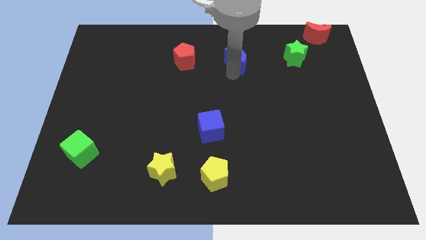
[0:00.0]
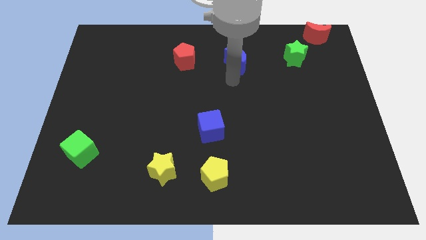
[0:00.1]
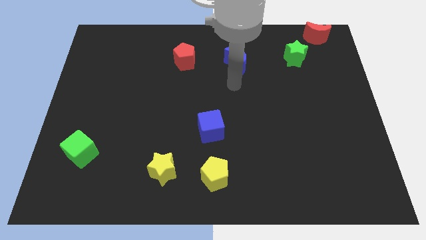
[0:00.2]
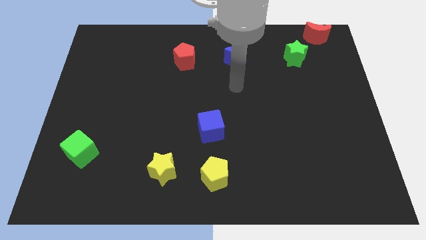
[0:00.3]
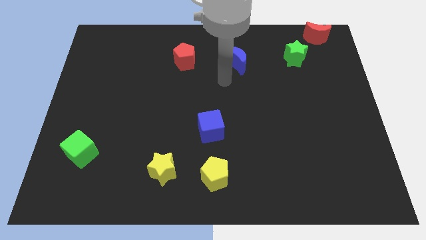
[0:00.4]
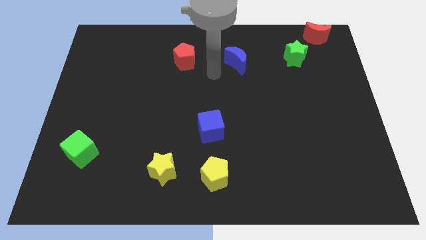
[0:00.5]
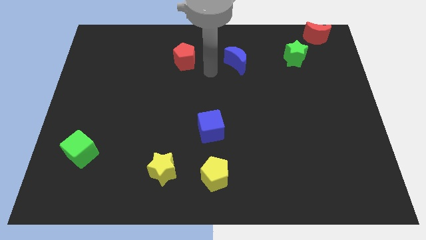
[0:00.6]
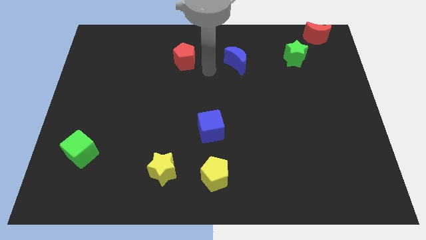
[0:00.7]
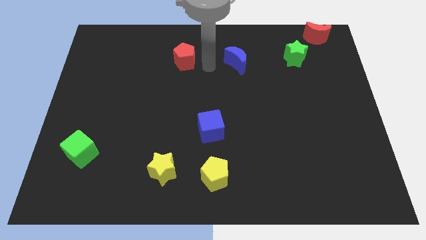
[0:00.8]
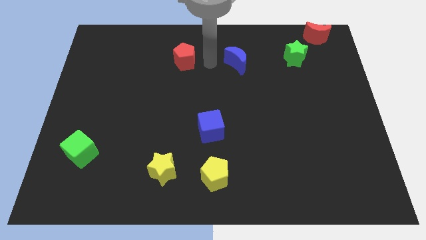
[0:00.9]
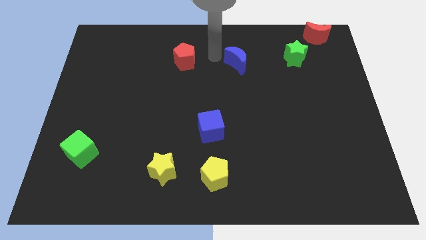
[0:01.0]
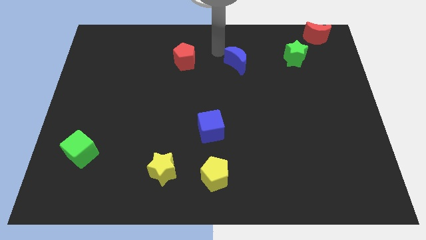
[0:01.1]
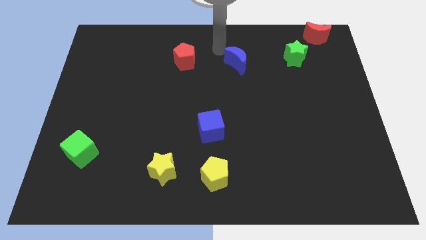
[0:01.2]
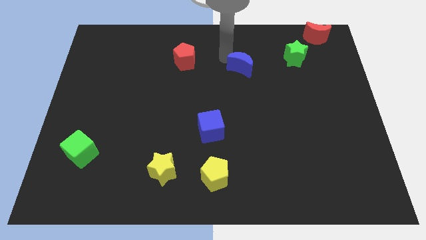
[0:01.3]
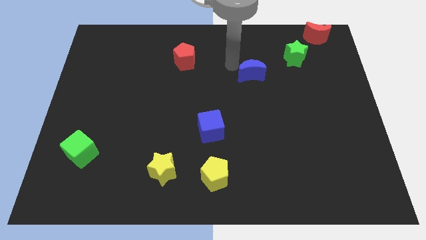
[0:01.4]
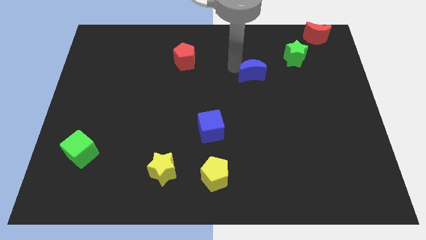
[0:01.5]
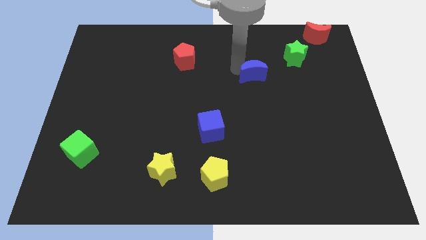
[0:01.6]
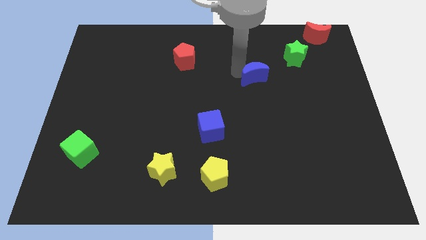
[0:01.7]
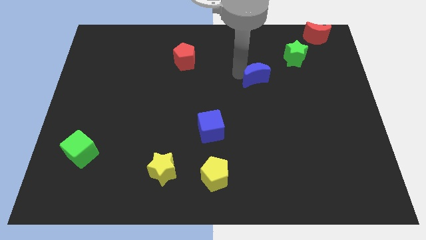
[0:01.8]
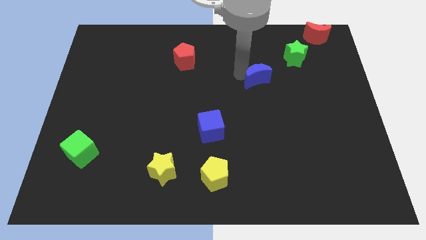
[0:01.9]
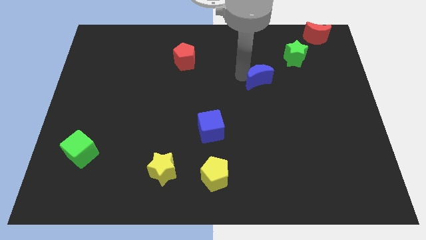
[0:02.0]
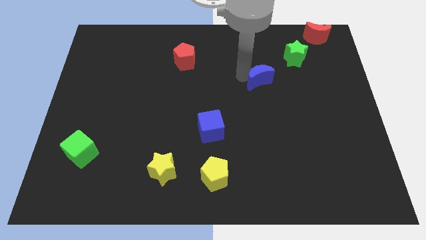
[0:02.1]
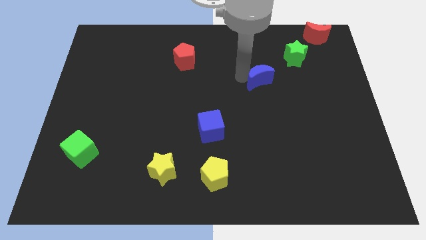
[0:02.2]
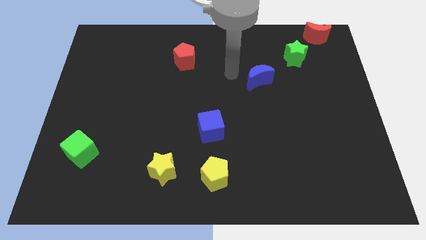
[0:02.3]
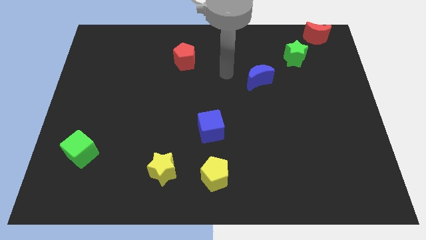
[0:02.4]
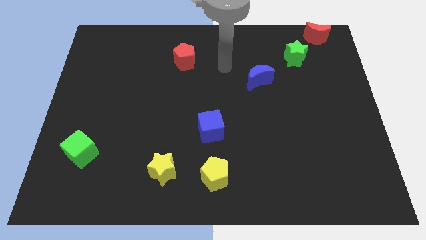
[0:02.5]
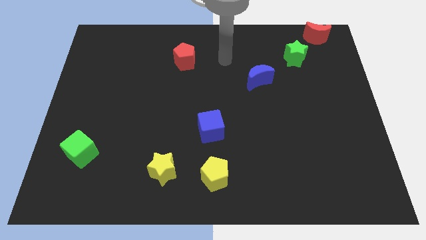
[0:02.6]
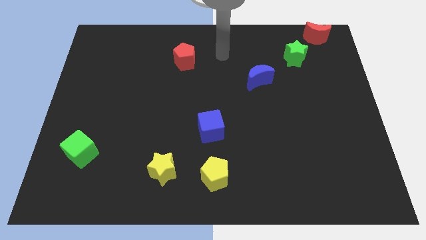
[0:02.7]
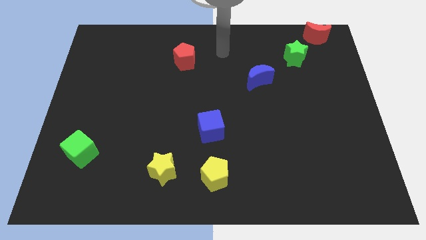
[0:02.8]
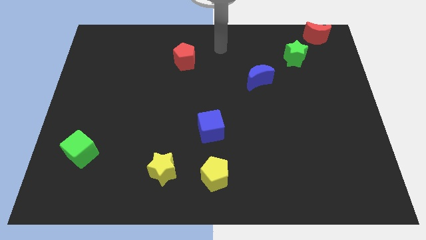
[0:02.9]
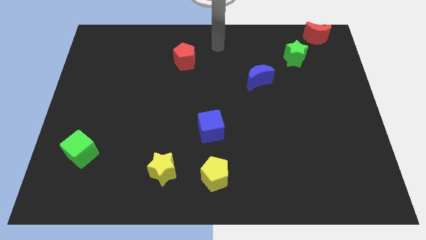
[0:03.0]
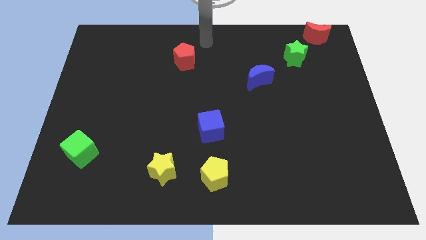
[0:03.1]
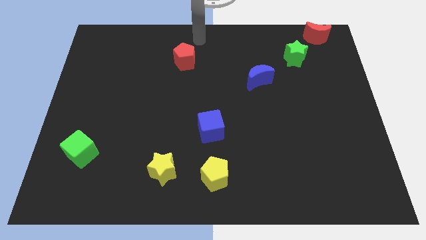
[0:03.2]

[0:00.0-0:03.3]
slide the blue moon diagonally on the bottom left side of the green star

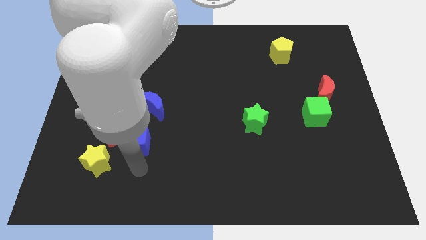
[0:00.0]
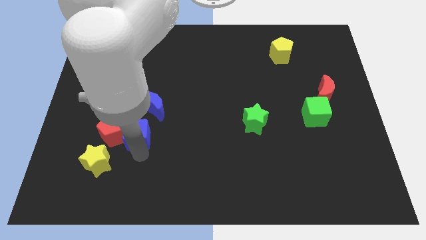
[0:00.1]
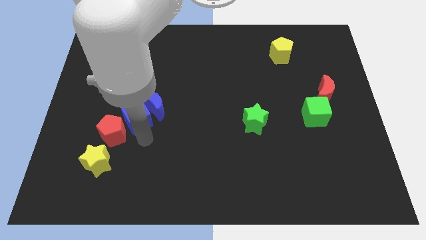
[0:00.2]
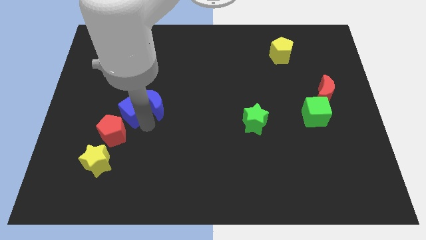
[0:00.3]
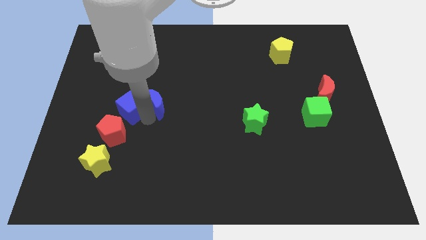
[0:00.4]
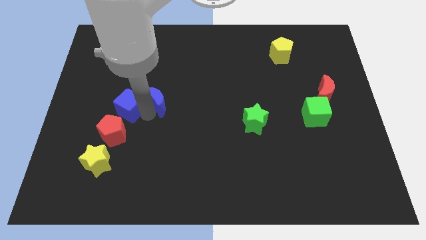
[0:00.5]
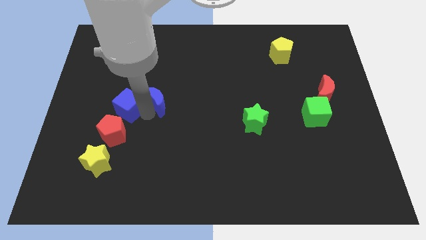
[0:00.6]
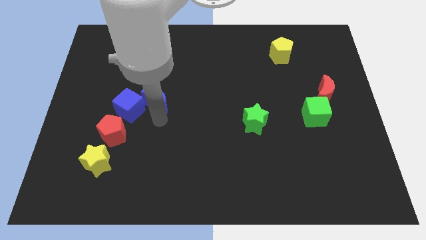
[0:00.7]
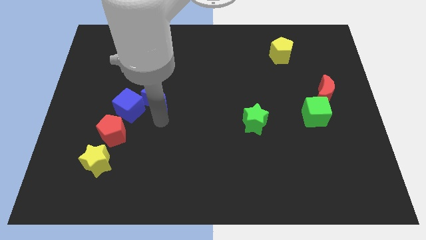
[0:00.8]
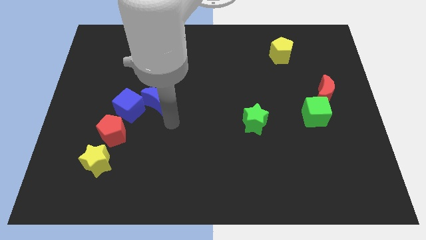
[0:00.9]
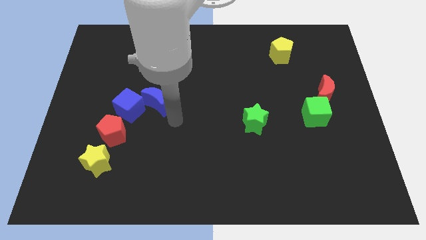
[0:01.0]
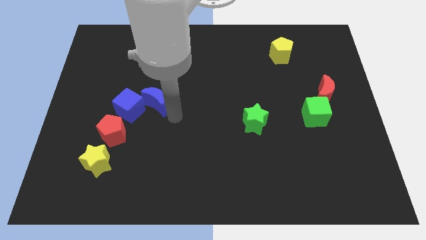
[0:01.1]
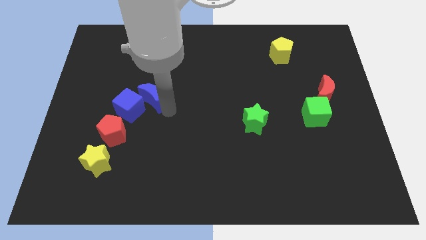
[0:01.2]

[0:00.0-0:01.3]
move the blue cube to the top side of the red pentagon

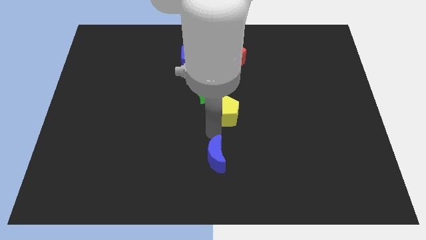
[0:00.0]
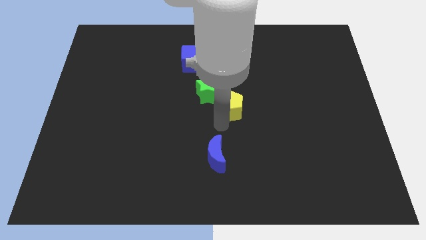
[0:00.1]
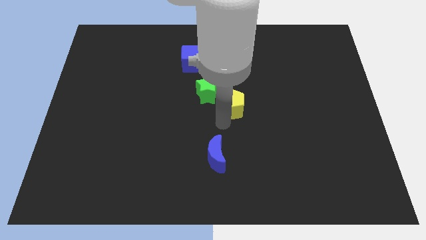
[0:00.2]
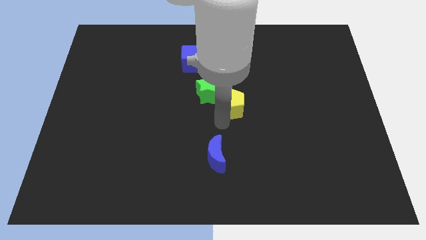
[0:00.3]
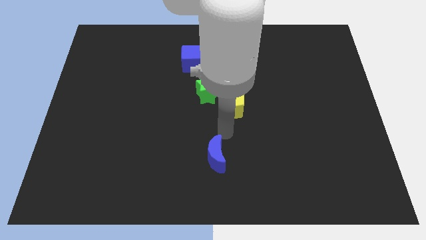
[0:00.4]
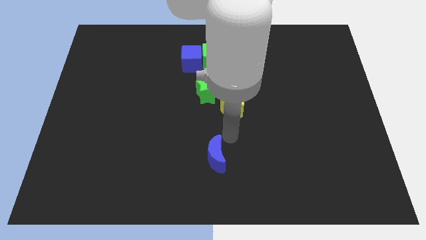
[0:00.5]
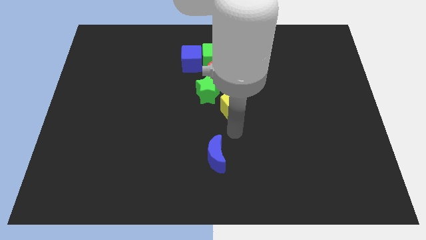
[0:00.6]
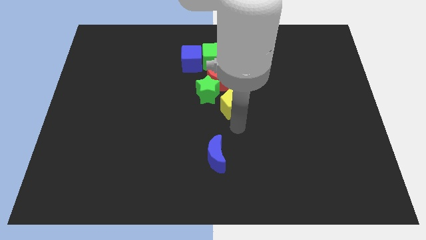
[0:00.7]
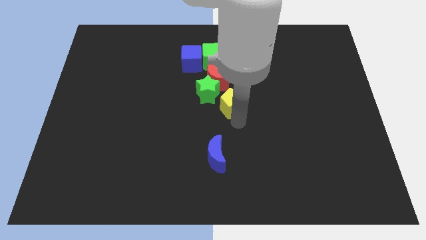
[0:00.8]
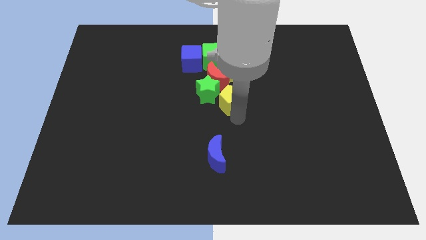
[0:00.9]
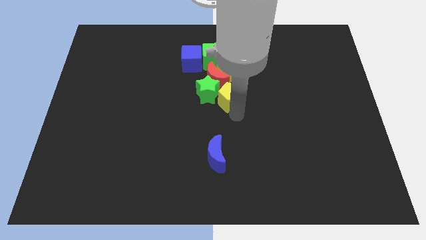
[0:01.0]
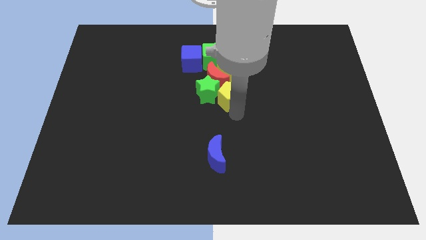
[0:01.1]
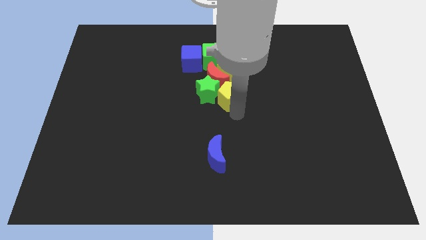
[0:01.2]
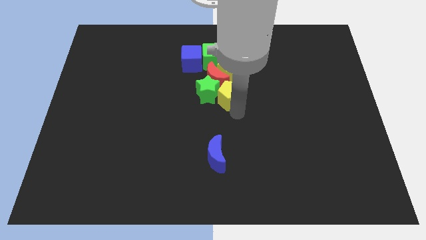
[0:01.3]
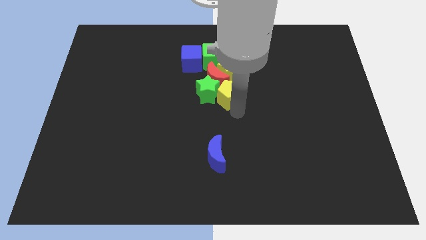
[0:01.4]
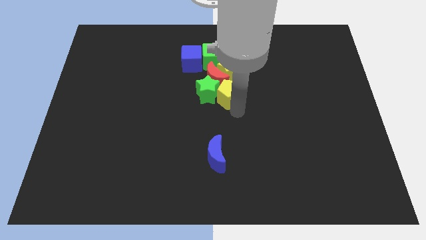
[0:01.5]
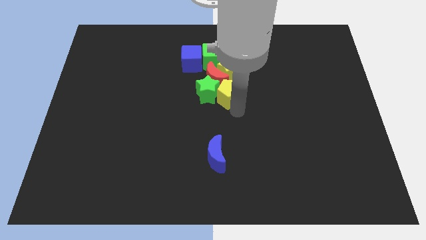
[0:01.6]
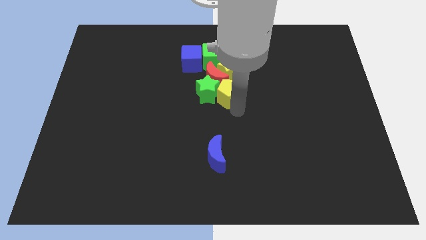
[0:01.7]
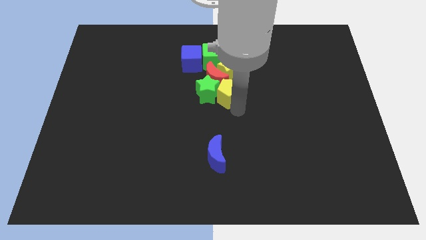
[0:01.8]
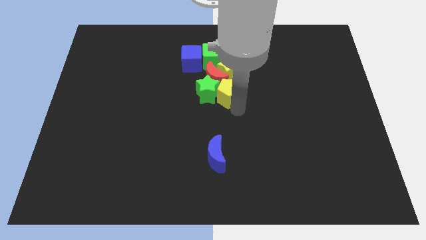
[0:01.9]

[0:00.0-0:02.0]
move the yellow pentagon to the right of the green star

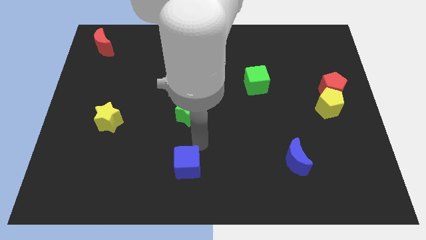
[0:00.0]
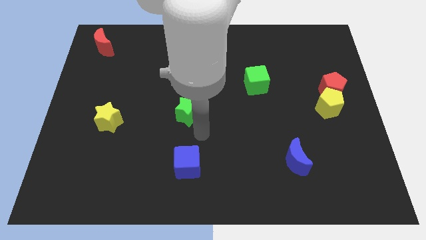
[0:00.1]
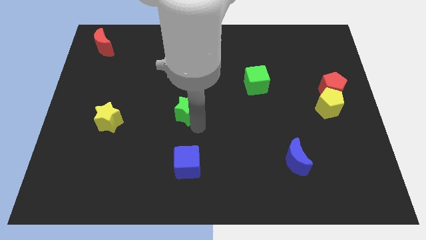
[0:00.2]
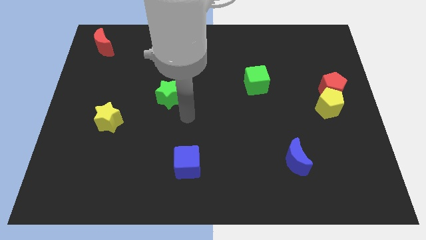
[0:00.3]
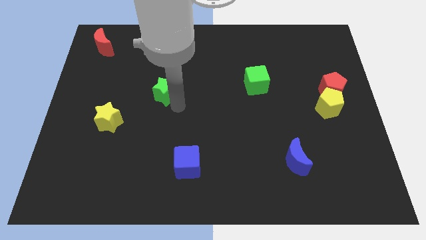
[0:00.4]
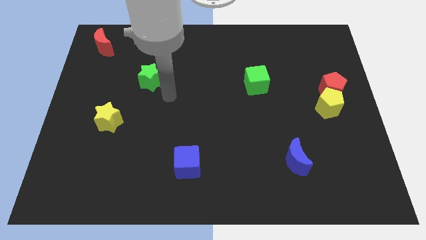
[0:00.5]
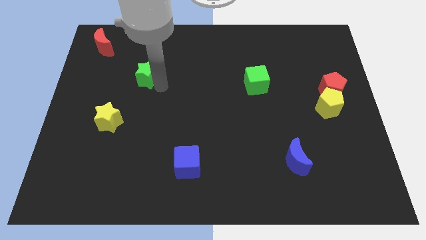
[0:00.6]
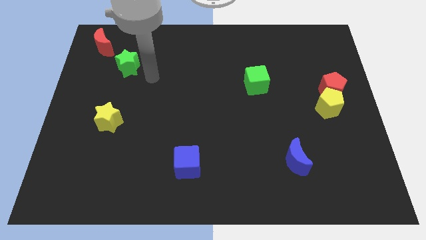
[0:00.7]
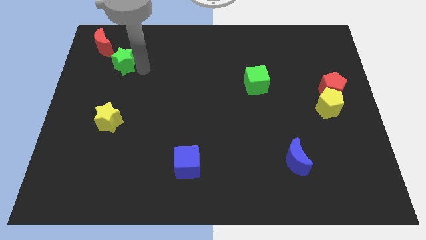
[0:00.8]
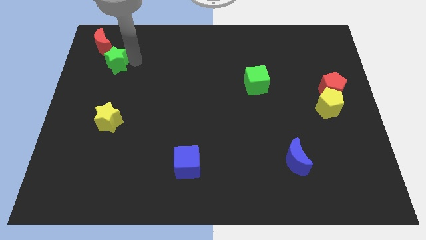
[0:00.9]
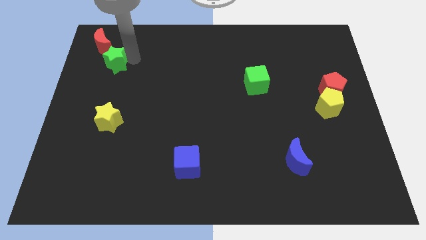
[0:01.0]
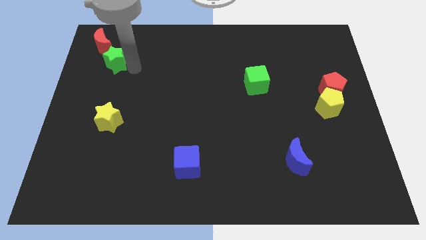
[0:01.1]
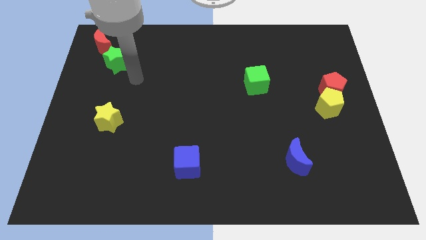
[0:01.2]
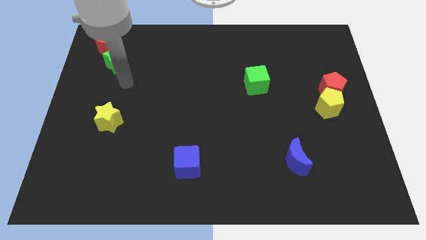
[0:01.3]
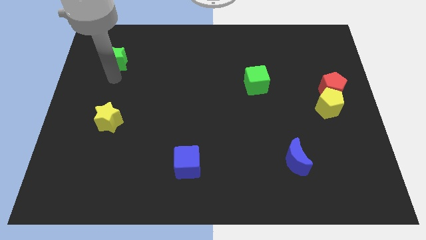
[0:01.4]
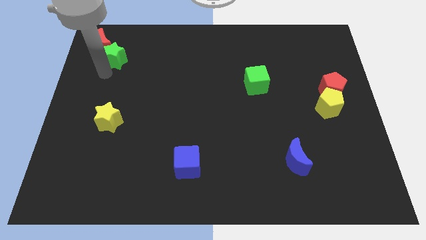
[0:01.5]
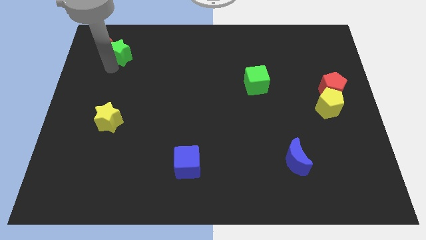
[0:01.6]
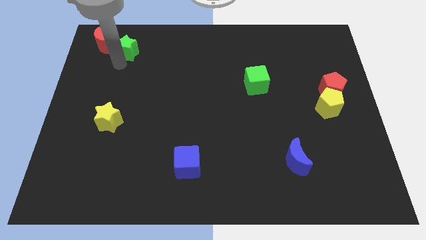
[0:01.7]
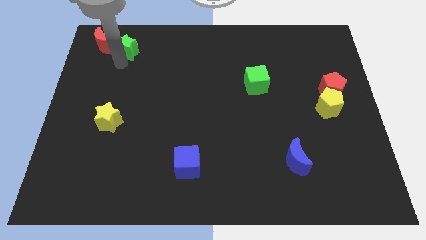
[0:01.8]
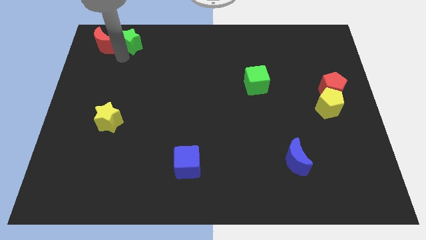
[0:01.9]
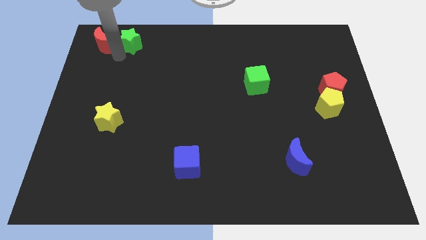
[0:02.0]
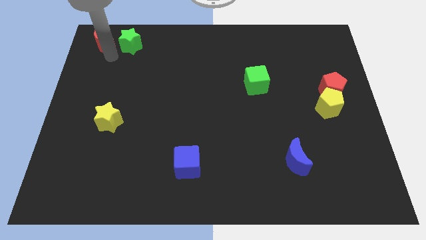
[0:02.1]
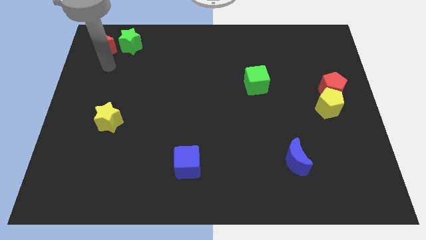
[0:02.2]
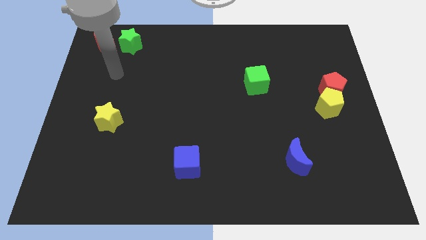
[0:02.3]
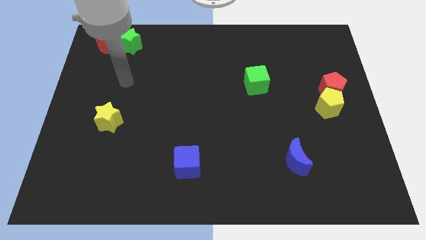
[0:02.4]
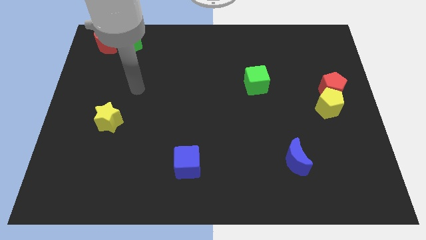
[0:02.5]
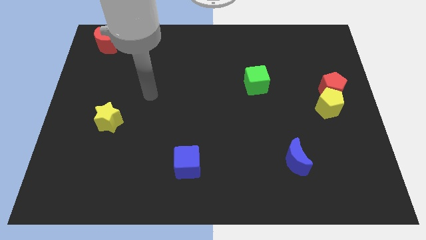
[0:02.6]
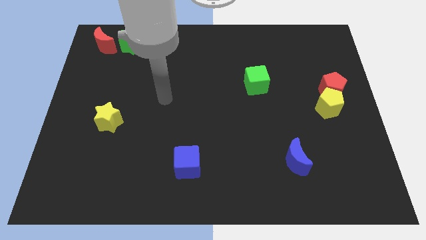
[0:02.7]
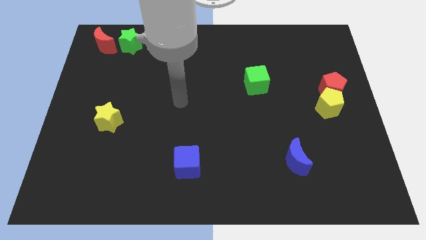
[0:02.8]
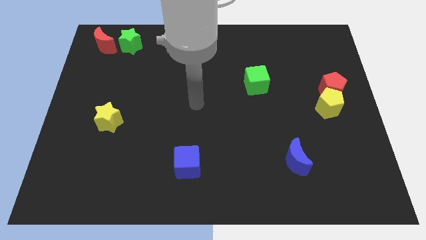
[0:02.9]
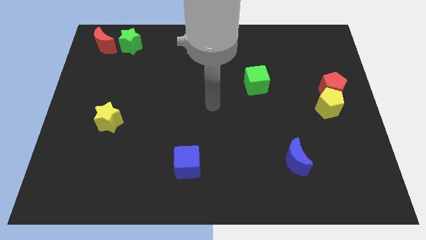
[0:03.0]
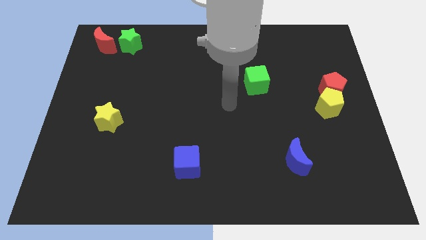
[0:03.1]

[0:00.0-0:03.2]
move the green star to the right of red moon
